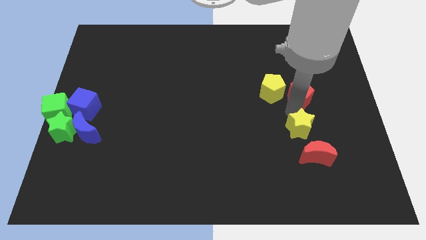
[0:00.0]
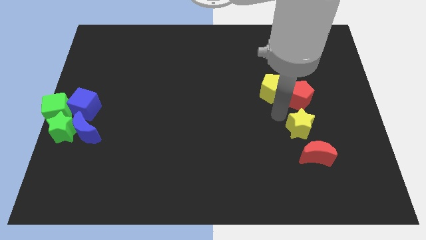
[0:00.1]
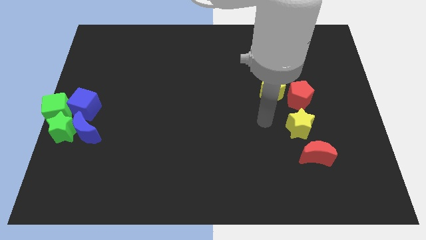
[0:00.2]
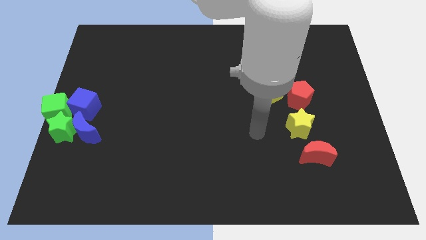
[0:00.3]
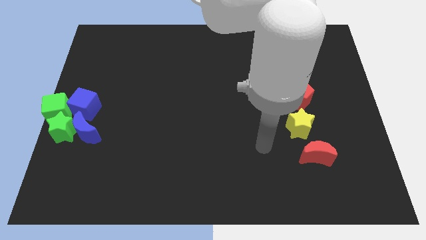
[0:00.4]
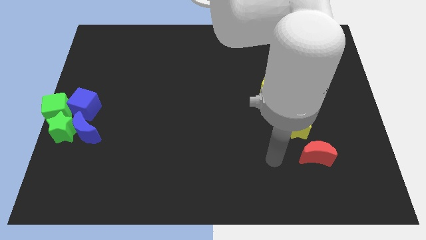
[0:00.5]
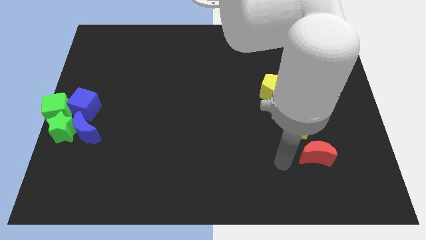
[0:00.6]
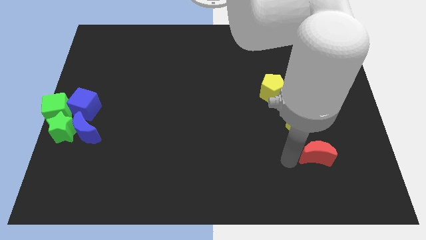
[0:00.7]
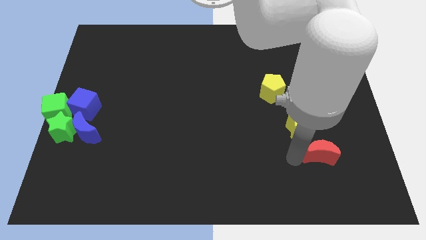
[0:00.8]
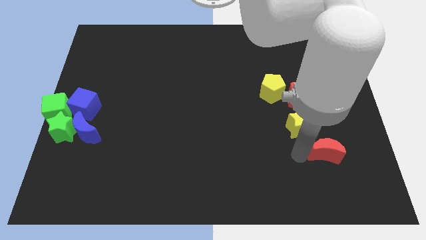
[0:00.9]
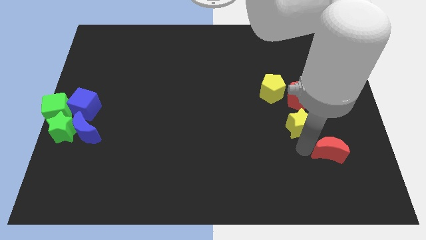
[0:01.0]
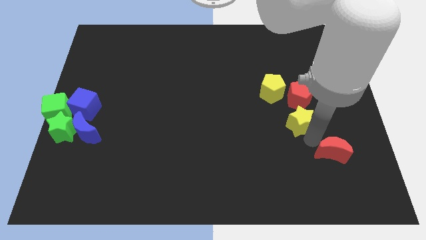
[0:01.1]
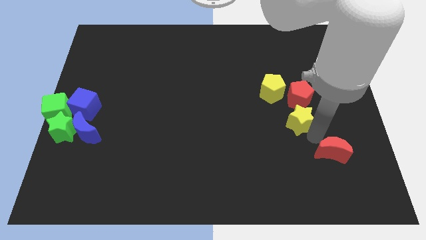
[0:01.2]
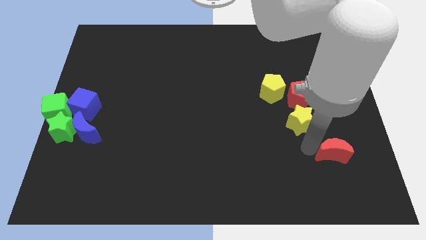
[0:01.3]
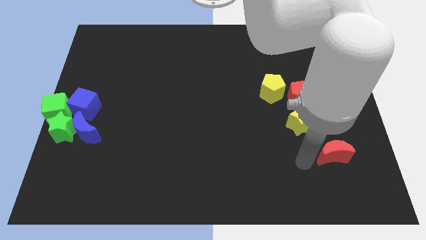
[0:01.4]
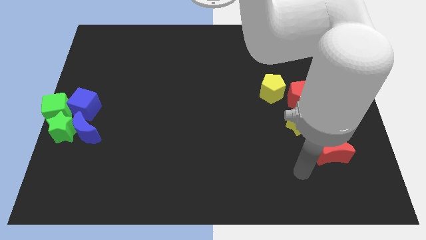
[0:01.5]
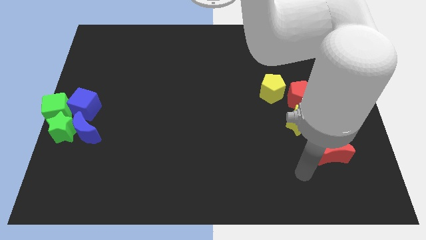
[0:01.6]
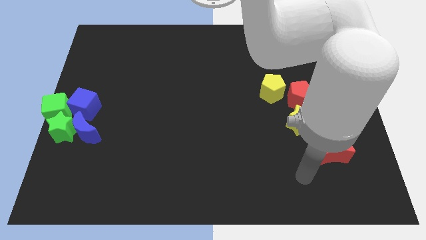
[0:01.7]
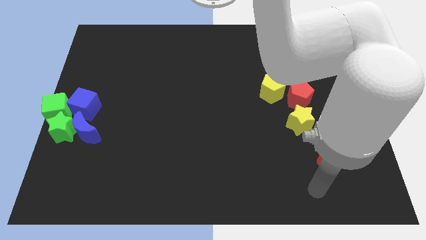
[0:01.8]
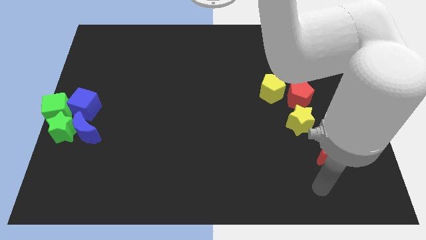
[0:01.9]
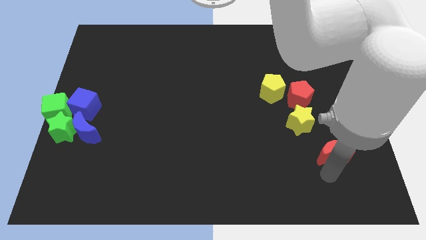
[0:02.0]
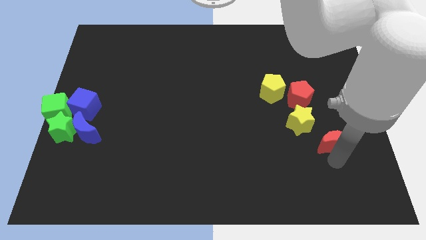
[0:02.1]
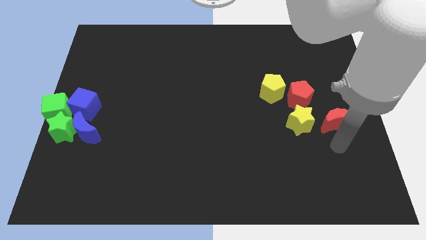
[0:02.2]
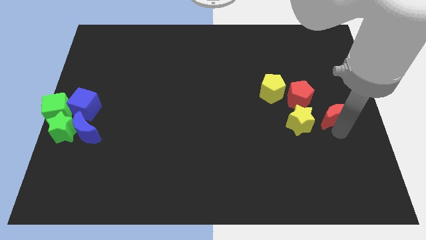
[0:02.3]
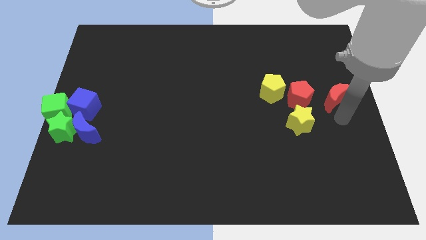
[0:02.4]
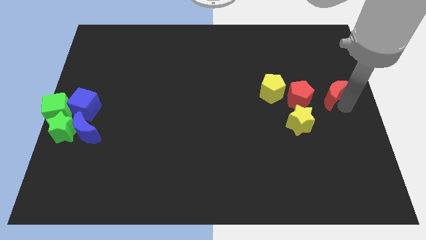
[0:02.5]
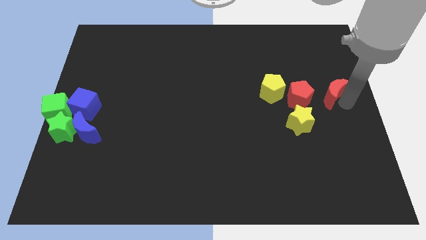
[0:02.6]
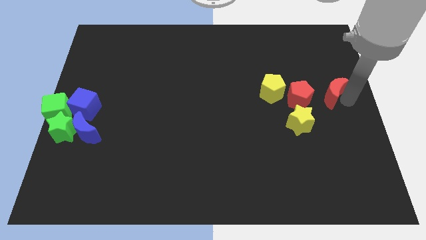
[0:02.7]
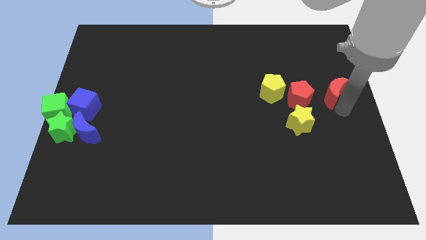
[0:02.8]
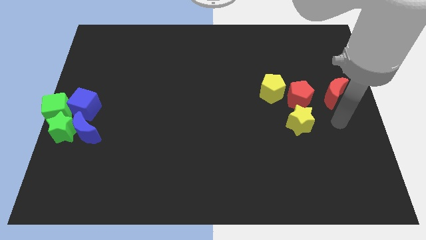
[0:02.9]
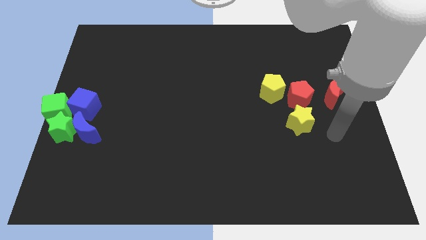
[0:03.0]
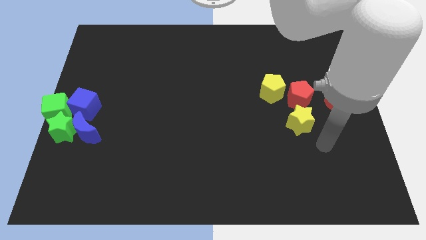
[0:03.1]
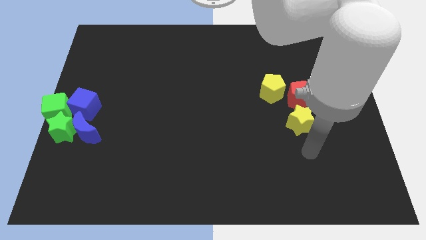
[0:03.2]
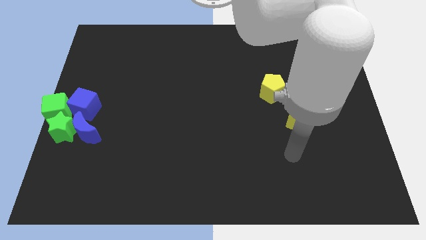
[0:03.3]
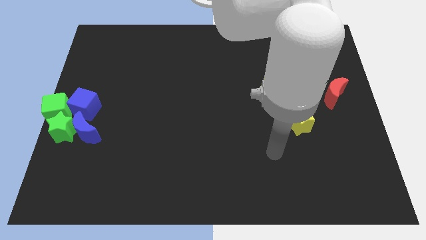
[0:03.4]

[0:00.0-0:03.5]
place the red moon at the right side of the red pentagon

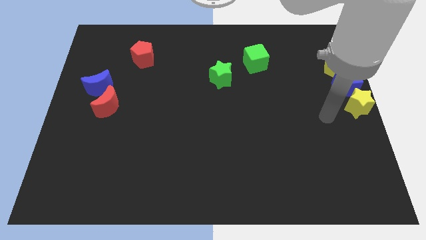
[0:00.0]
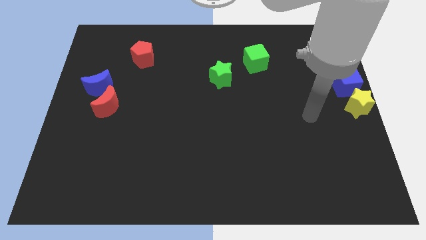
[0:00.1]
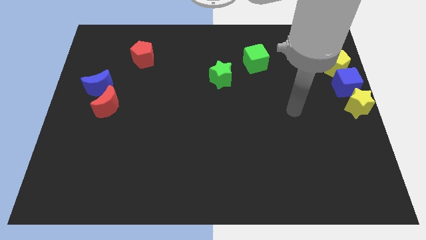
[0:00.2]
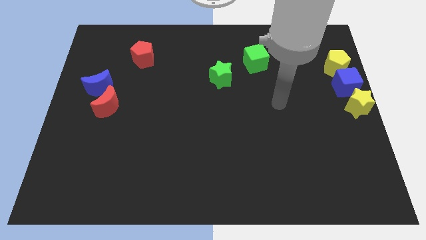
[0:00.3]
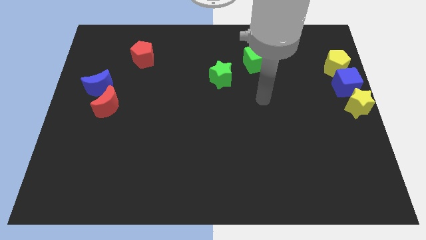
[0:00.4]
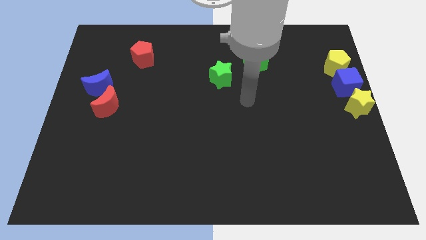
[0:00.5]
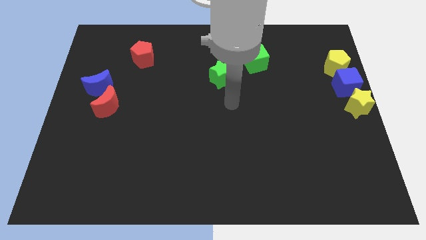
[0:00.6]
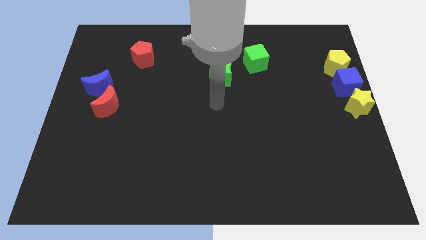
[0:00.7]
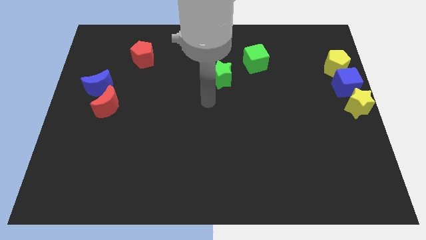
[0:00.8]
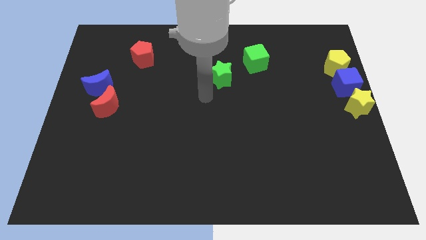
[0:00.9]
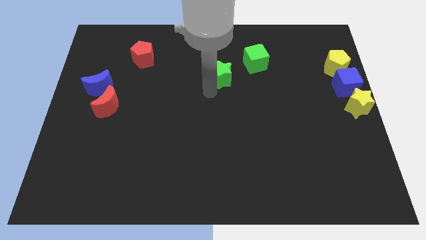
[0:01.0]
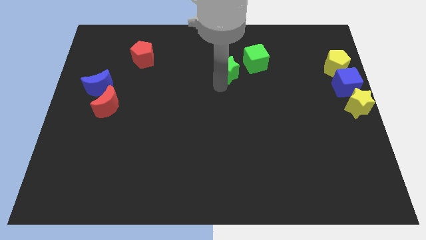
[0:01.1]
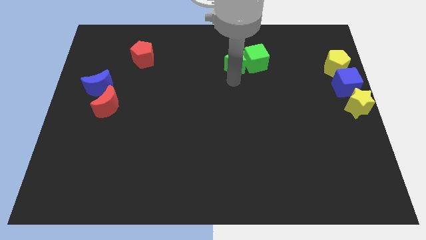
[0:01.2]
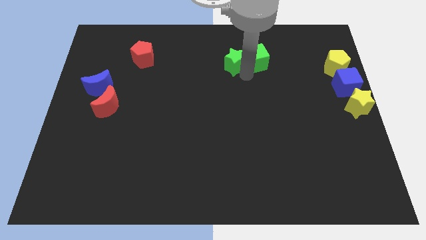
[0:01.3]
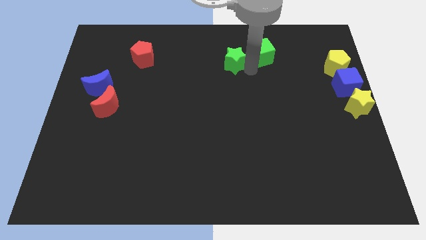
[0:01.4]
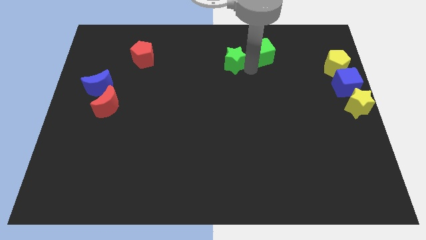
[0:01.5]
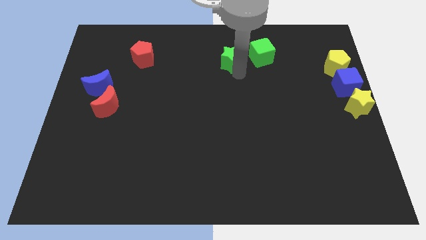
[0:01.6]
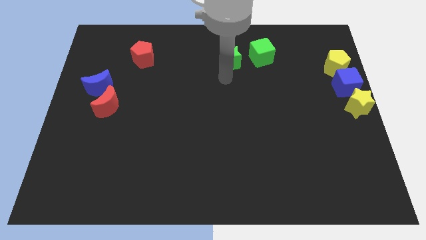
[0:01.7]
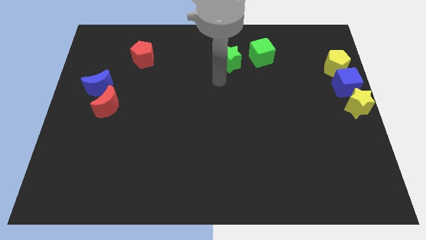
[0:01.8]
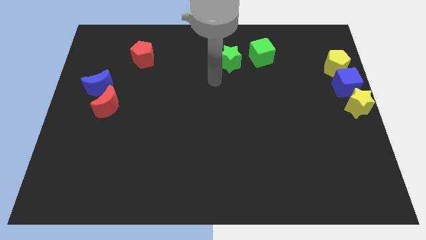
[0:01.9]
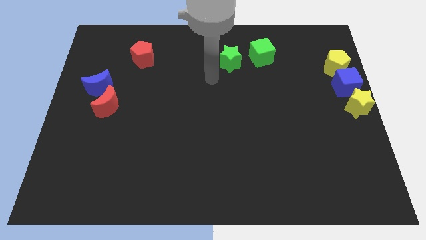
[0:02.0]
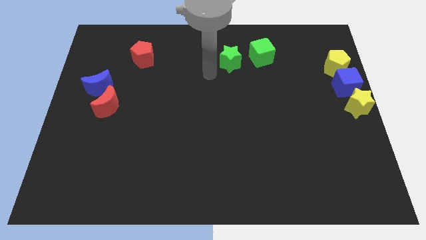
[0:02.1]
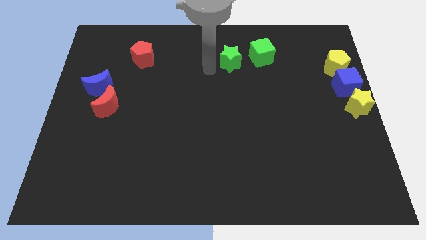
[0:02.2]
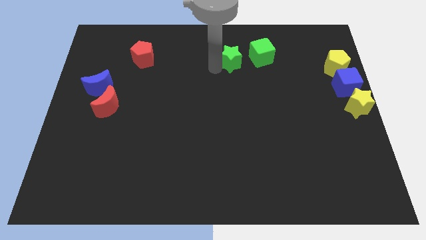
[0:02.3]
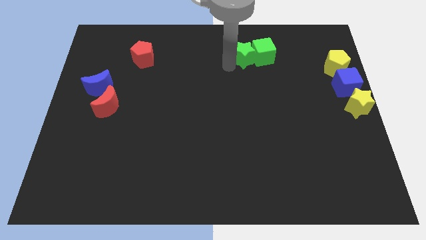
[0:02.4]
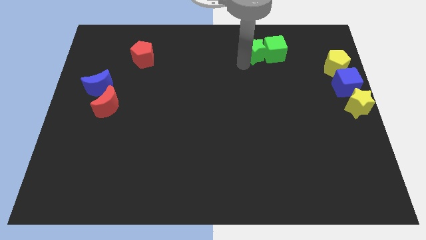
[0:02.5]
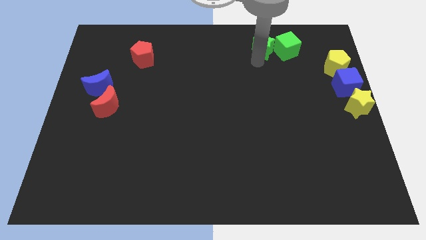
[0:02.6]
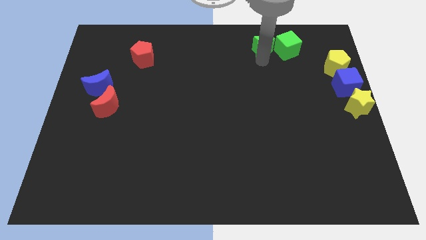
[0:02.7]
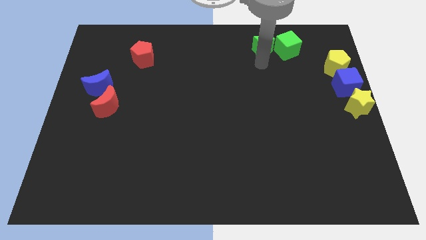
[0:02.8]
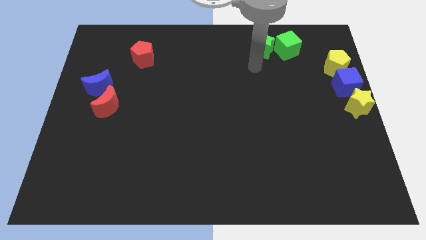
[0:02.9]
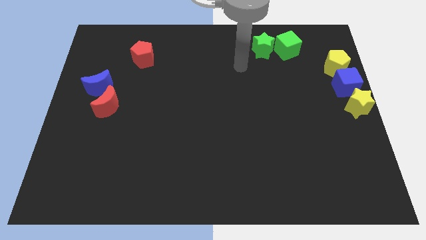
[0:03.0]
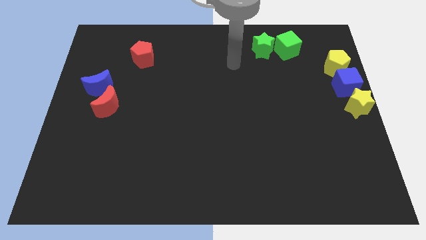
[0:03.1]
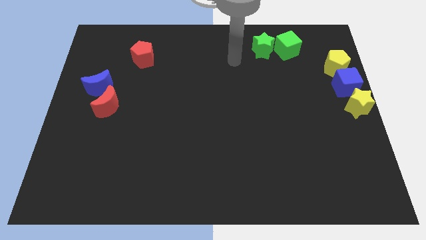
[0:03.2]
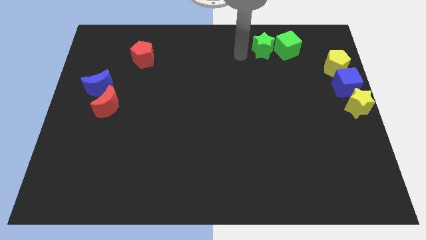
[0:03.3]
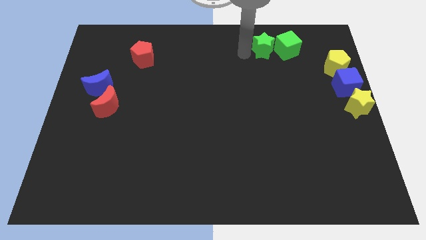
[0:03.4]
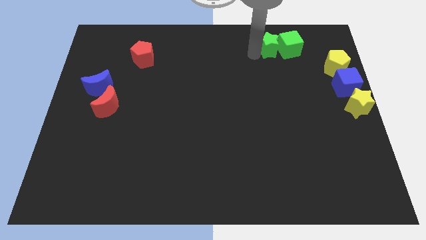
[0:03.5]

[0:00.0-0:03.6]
push the green blocks to the top right of the board

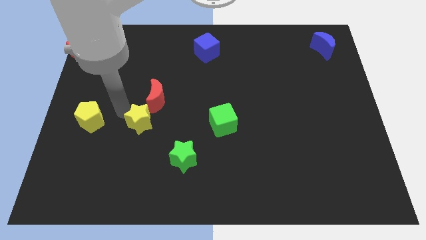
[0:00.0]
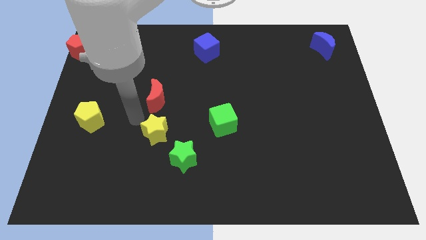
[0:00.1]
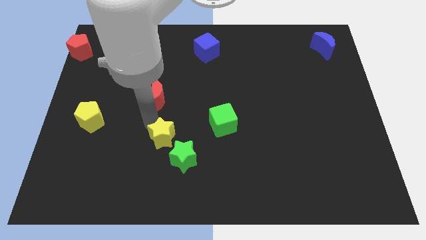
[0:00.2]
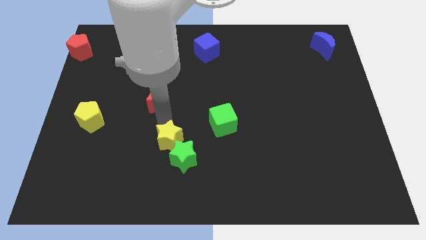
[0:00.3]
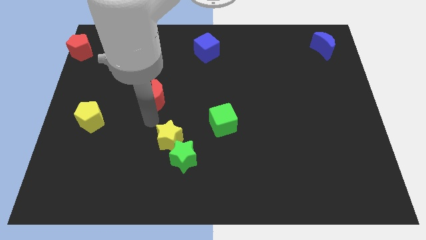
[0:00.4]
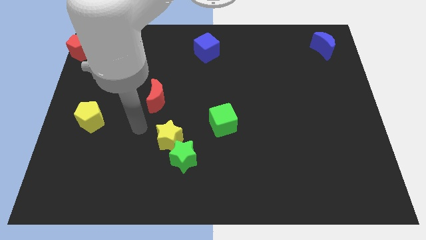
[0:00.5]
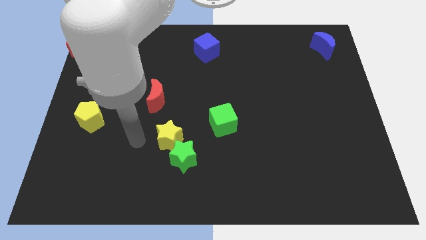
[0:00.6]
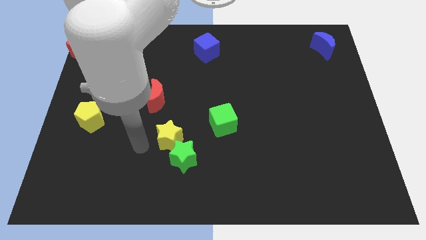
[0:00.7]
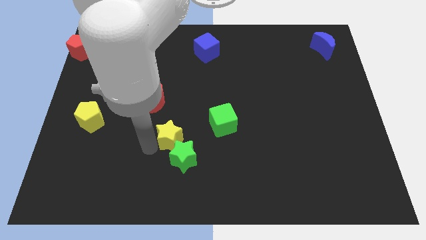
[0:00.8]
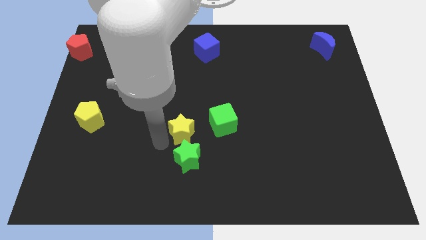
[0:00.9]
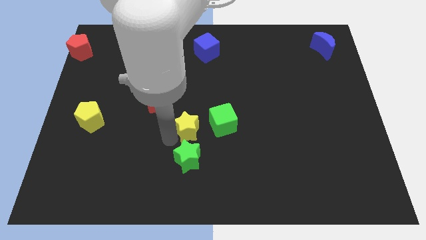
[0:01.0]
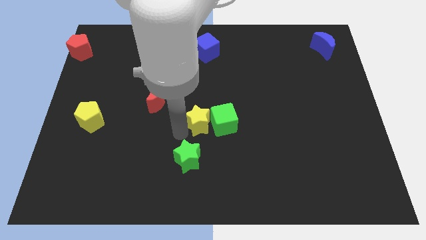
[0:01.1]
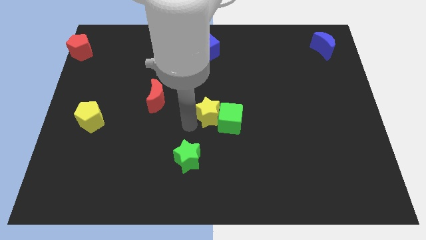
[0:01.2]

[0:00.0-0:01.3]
place the yellow star left to the green cube

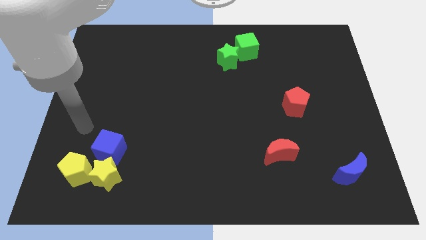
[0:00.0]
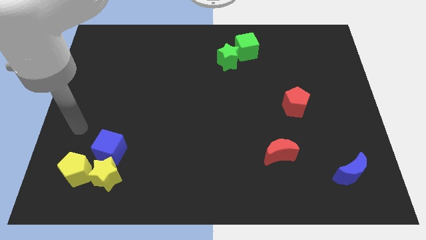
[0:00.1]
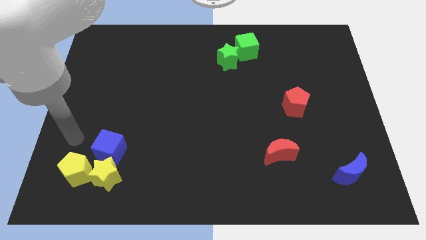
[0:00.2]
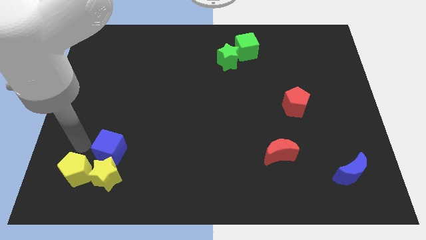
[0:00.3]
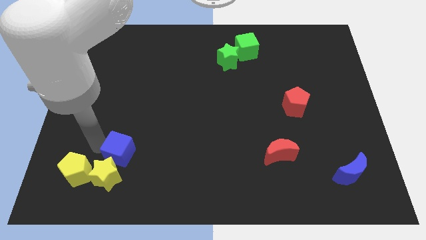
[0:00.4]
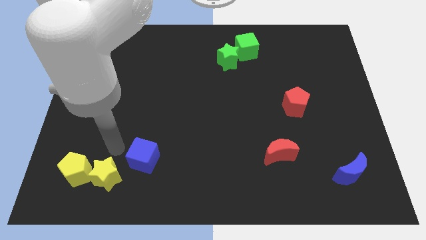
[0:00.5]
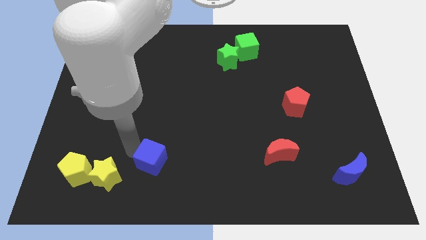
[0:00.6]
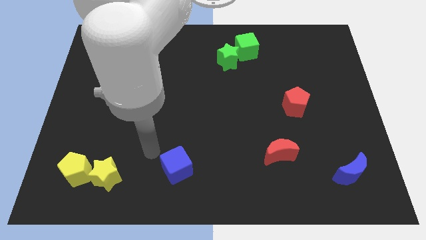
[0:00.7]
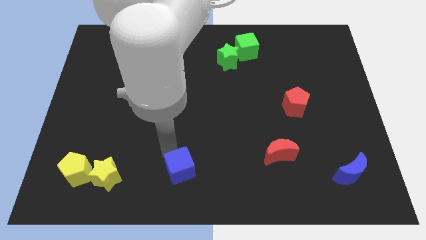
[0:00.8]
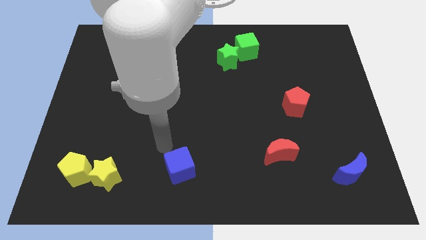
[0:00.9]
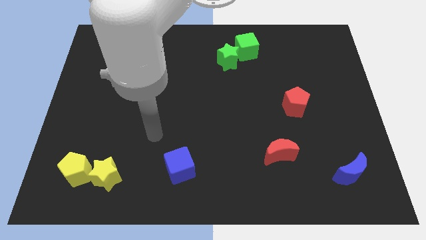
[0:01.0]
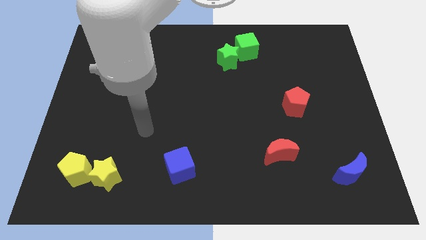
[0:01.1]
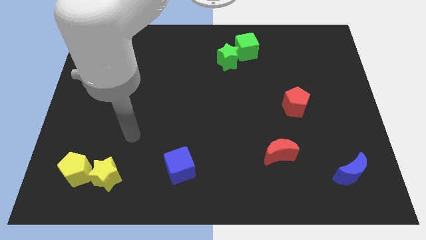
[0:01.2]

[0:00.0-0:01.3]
place the blue cube to the right of the yellow star
